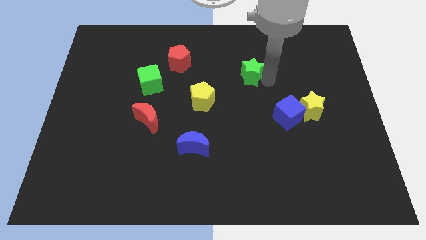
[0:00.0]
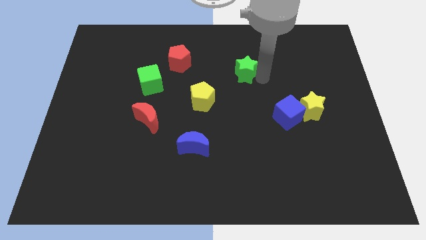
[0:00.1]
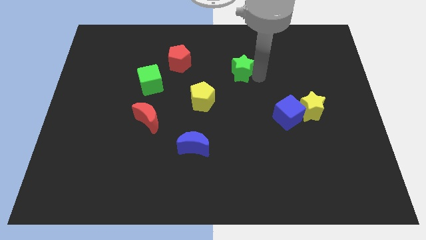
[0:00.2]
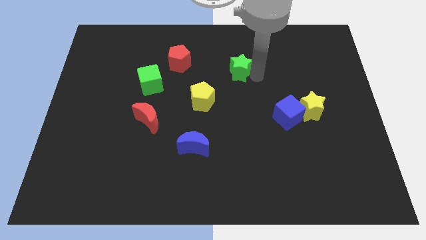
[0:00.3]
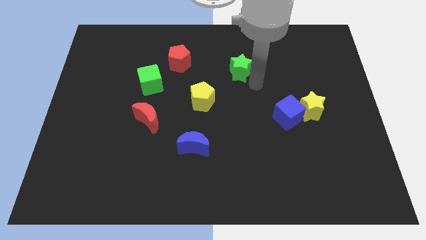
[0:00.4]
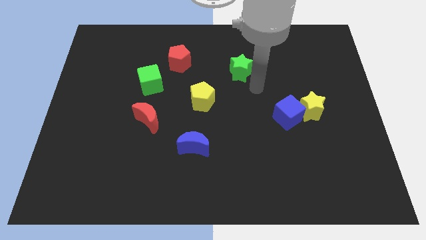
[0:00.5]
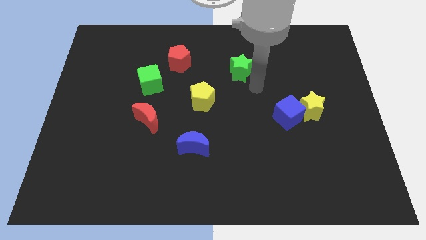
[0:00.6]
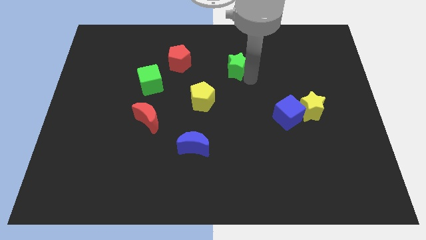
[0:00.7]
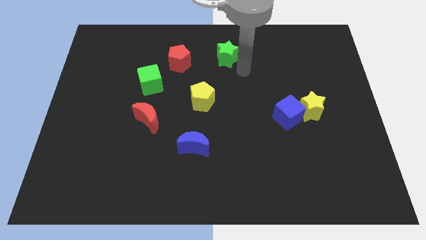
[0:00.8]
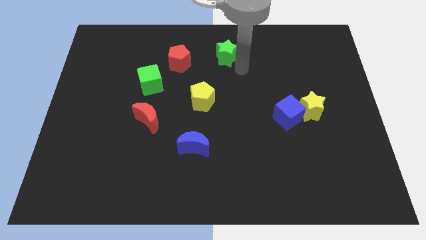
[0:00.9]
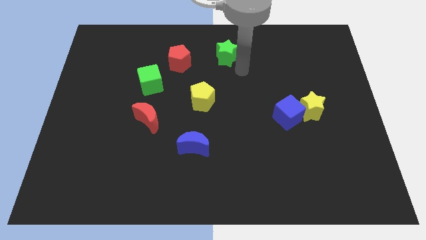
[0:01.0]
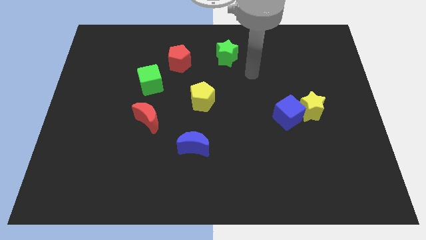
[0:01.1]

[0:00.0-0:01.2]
move green star slightly towards top left

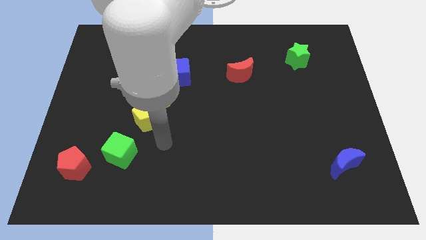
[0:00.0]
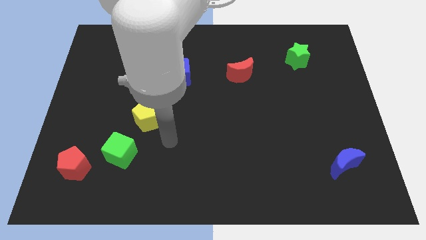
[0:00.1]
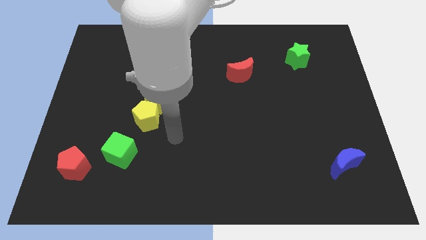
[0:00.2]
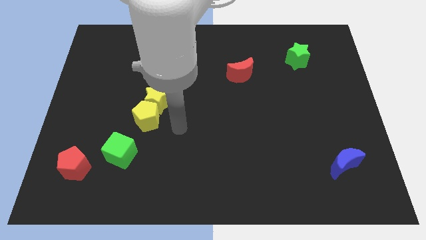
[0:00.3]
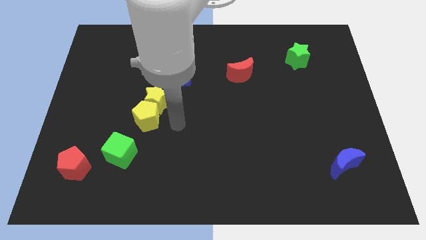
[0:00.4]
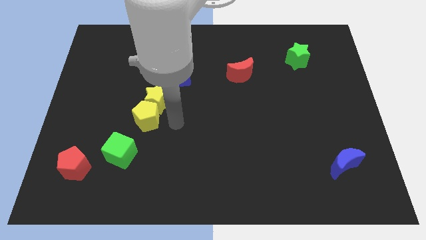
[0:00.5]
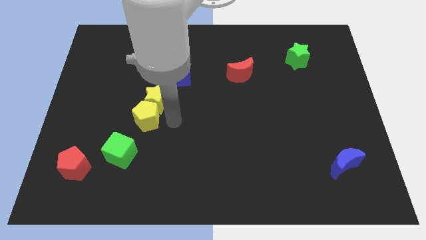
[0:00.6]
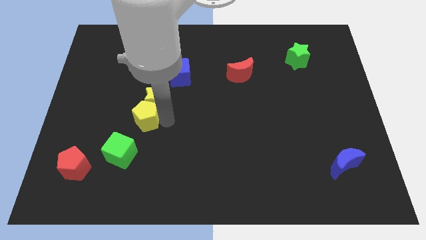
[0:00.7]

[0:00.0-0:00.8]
place your arm to the right side of yellow pentagon

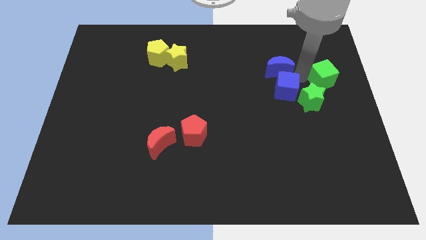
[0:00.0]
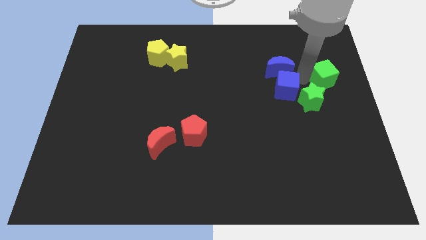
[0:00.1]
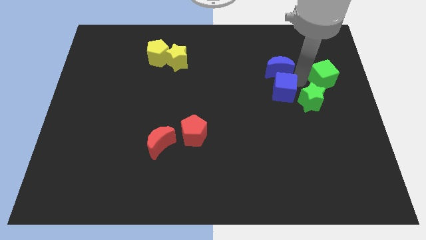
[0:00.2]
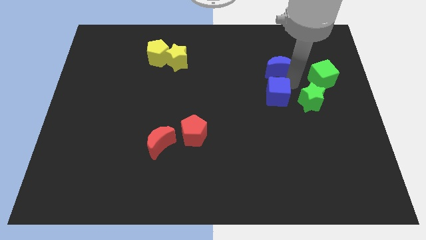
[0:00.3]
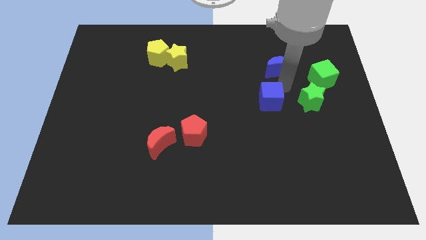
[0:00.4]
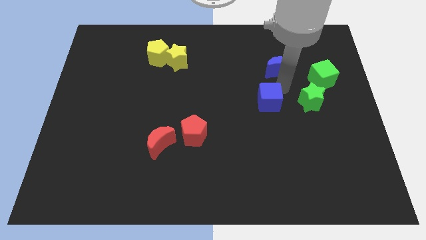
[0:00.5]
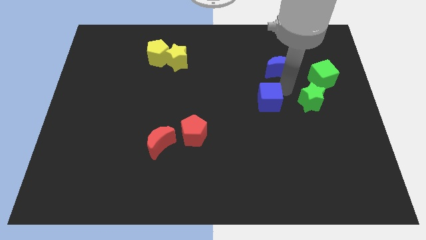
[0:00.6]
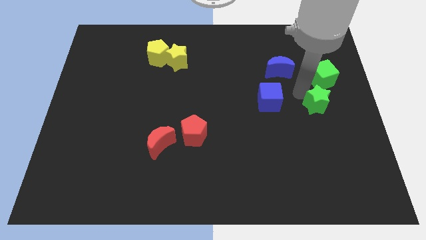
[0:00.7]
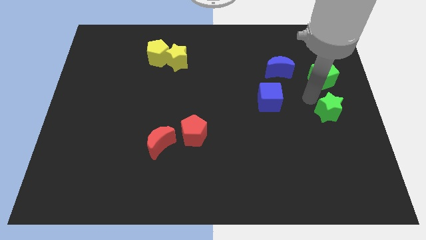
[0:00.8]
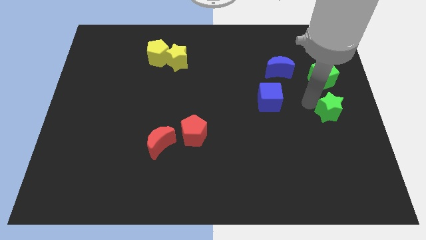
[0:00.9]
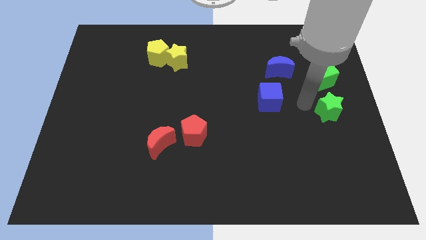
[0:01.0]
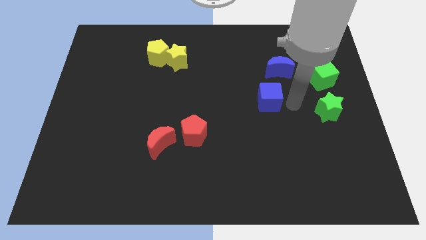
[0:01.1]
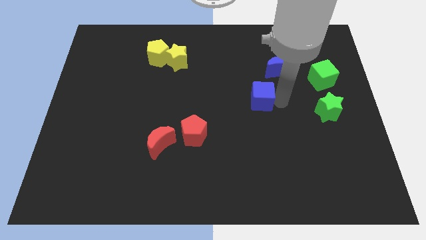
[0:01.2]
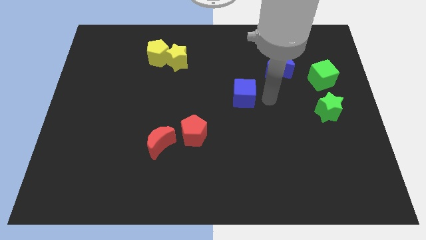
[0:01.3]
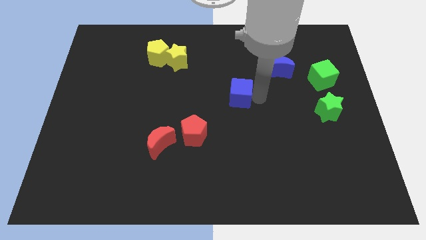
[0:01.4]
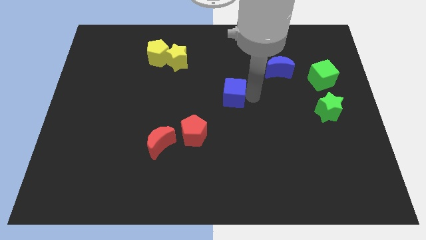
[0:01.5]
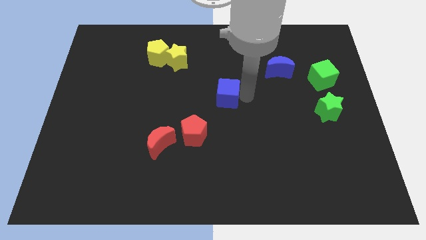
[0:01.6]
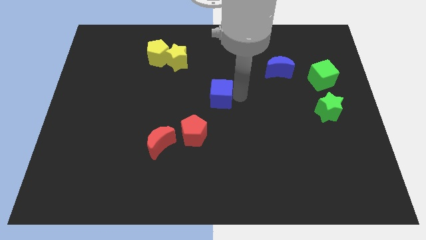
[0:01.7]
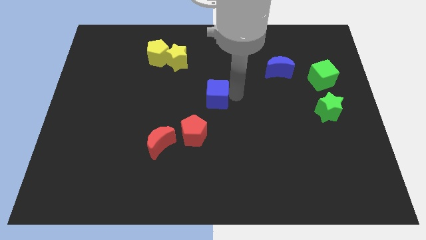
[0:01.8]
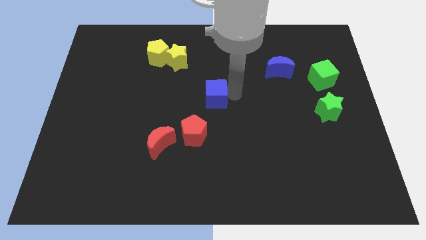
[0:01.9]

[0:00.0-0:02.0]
move the blue cube towards the center of the board

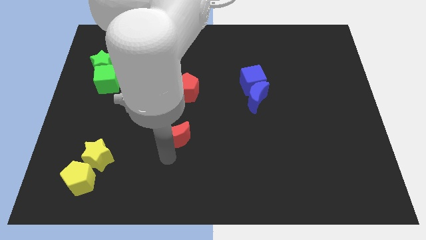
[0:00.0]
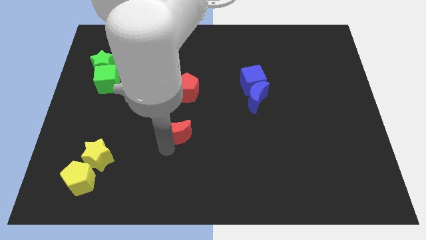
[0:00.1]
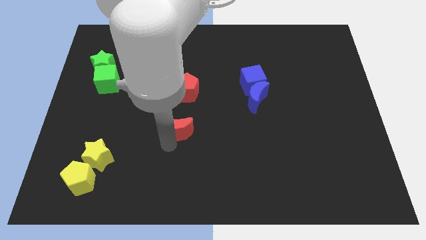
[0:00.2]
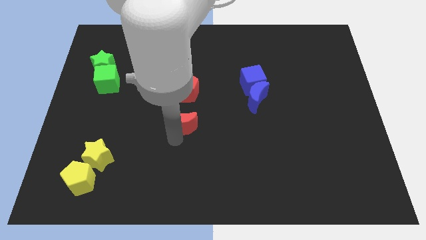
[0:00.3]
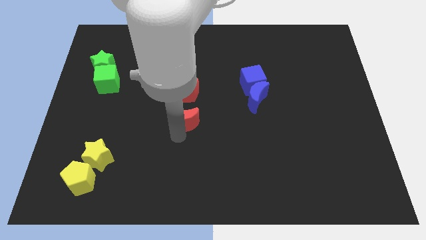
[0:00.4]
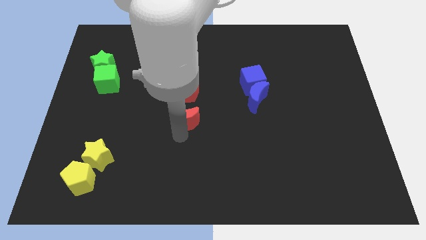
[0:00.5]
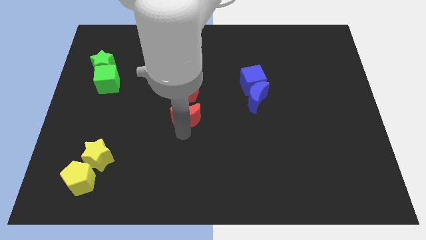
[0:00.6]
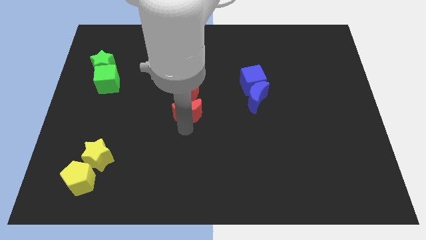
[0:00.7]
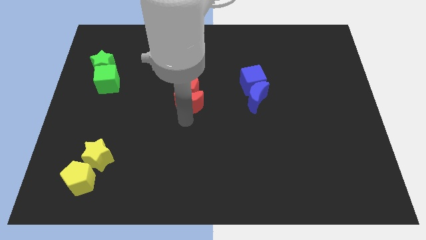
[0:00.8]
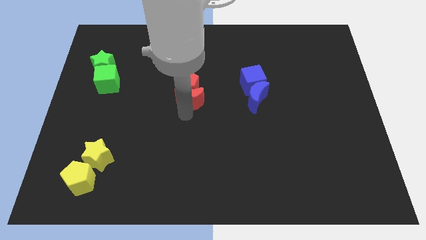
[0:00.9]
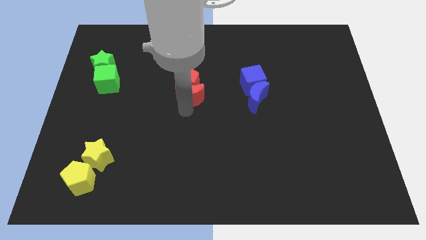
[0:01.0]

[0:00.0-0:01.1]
move the red crescent to the bottom of the red pentagon

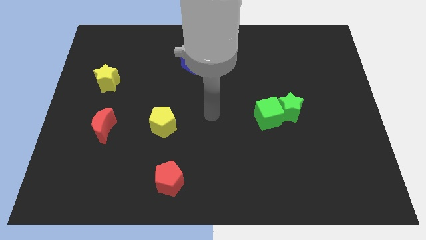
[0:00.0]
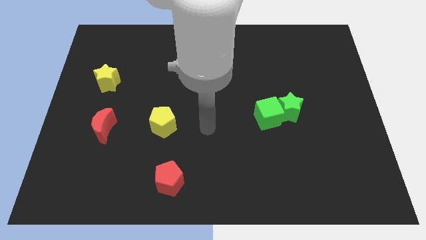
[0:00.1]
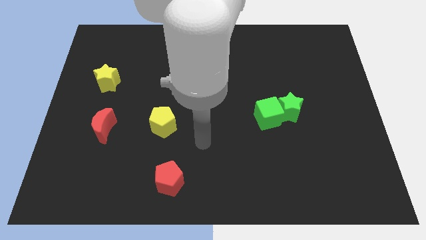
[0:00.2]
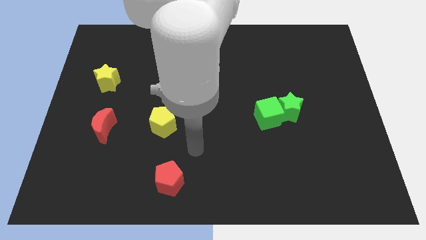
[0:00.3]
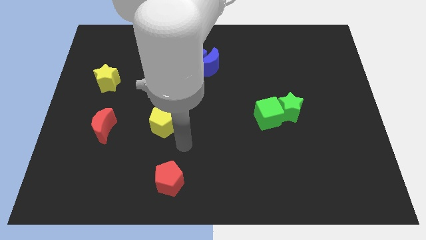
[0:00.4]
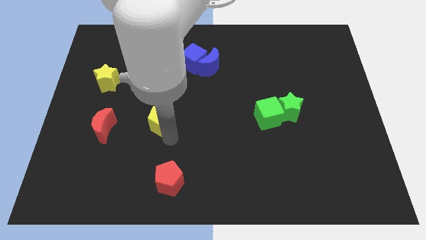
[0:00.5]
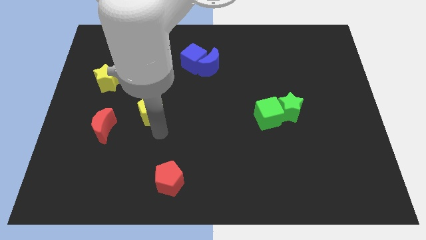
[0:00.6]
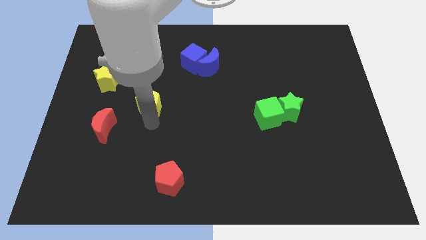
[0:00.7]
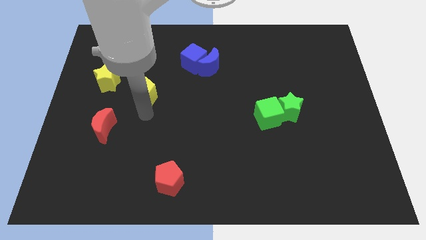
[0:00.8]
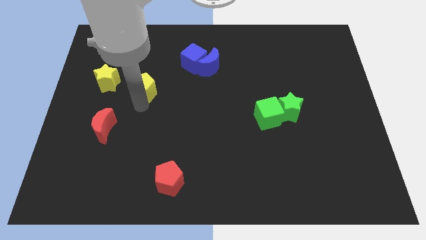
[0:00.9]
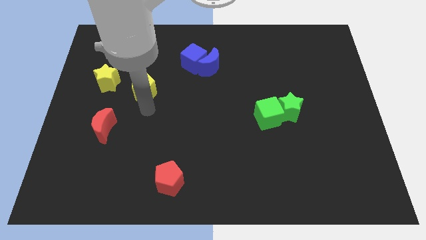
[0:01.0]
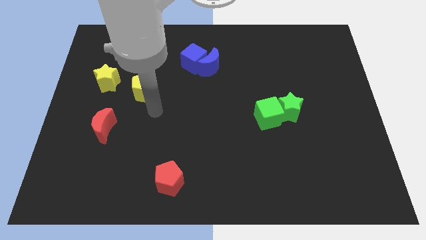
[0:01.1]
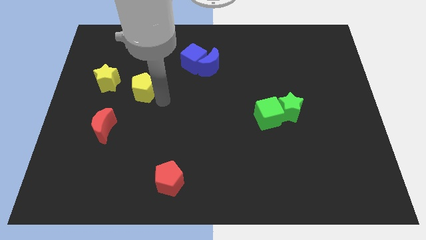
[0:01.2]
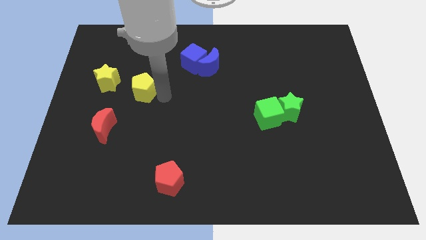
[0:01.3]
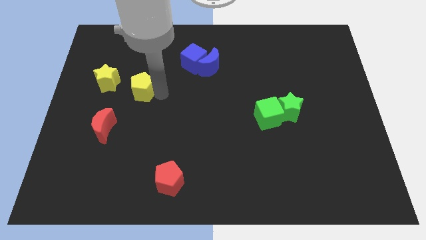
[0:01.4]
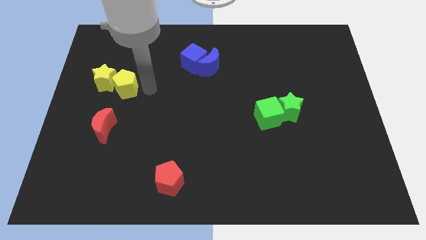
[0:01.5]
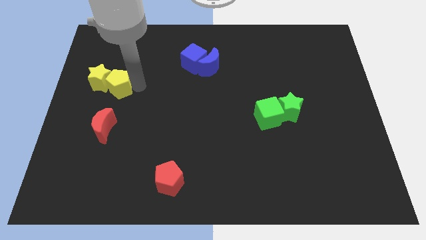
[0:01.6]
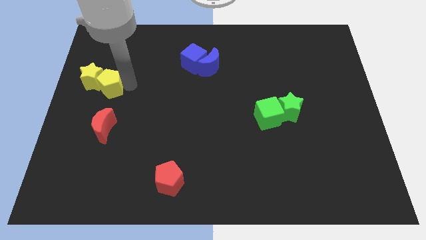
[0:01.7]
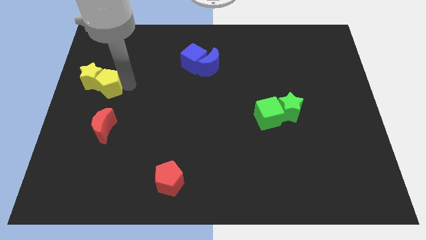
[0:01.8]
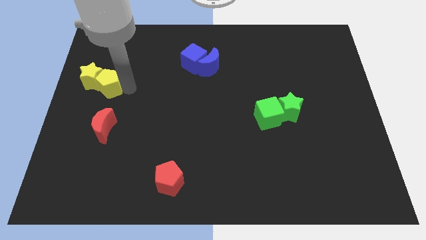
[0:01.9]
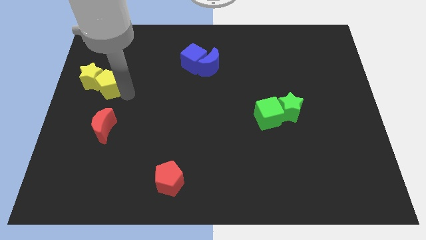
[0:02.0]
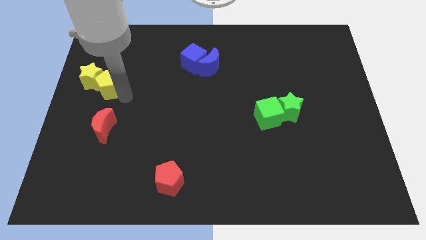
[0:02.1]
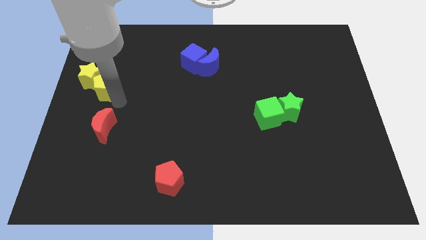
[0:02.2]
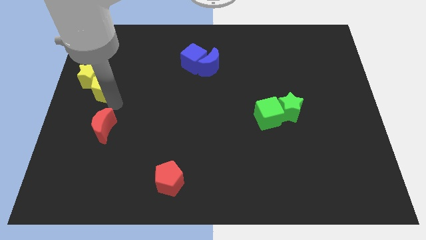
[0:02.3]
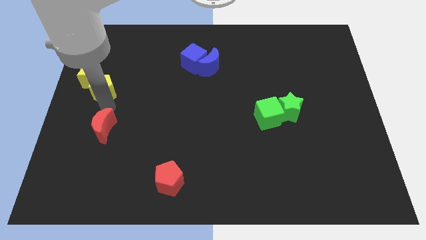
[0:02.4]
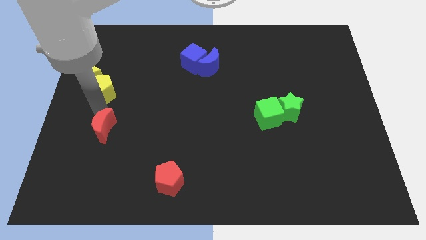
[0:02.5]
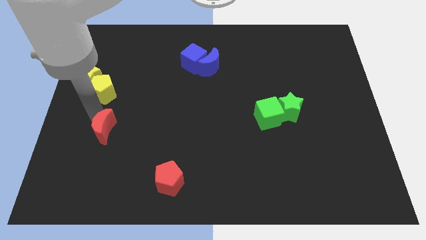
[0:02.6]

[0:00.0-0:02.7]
push the yellow star and yellow pentagon to the left side of the board

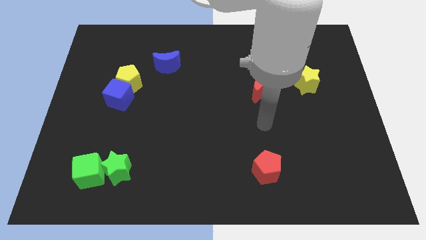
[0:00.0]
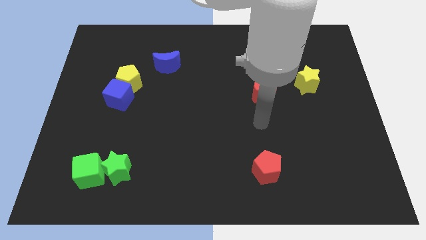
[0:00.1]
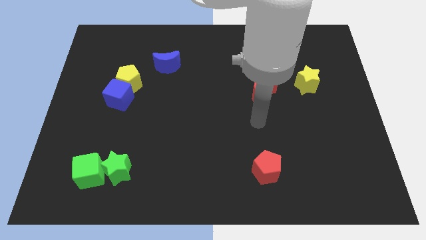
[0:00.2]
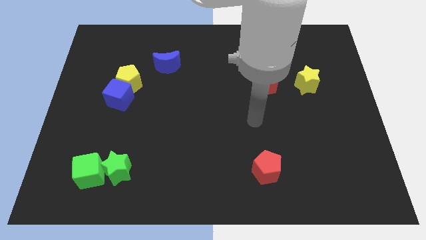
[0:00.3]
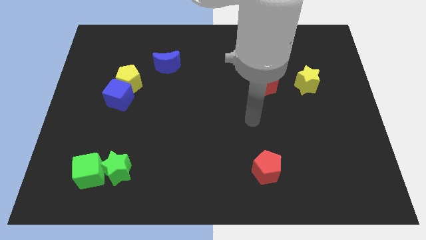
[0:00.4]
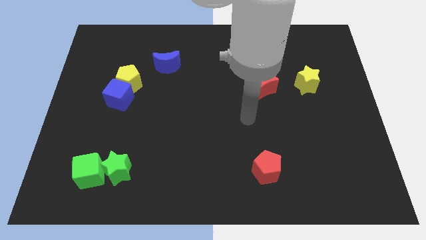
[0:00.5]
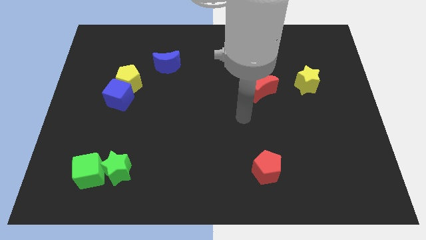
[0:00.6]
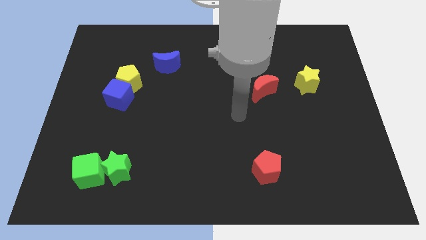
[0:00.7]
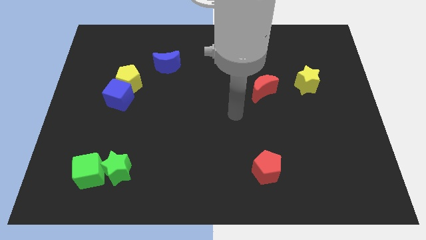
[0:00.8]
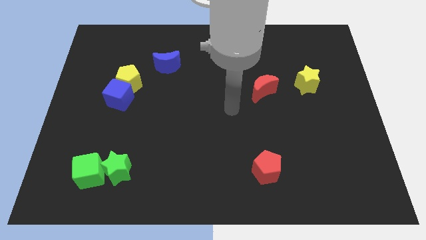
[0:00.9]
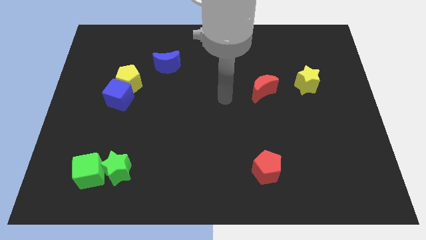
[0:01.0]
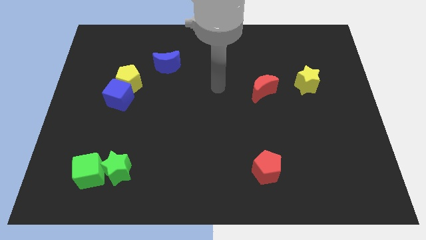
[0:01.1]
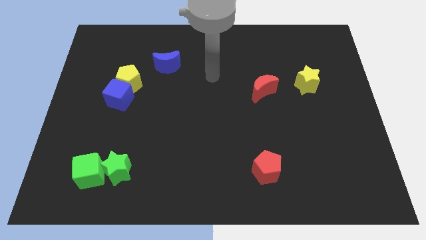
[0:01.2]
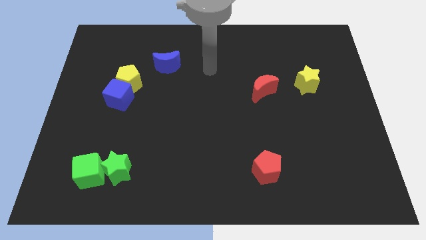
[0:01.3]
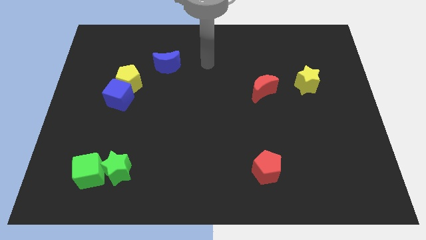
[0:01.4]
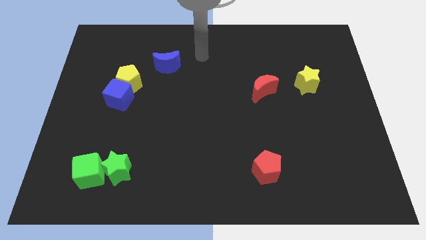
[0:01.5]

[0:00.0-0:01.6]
move your arm to the right of the blue crescent
